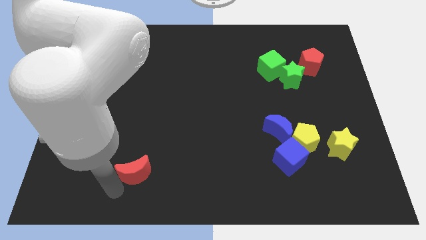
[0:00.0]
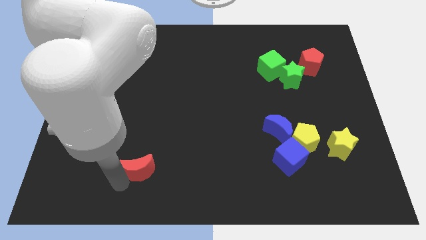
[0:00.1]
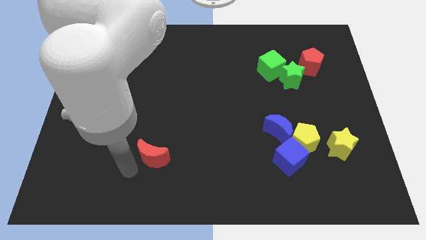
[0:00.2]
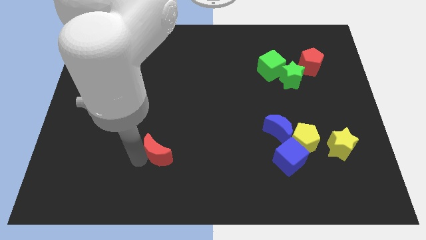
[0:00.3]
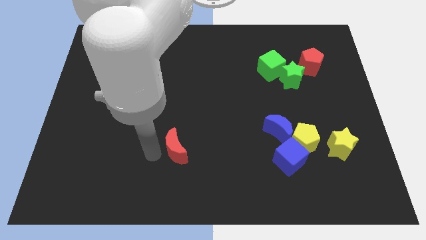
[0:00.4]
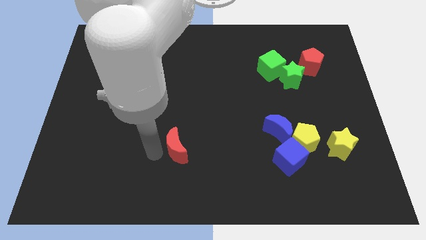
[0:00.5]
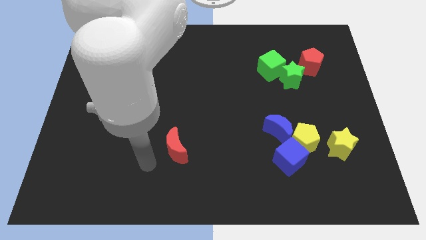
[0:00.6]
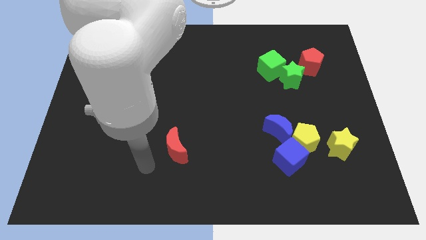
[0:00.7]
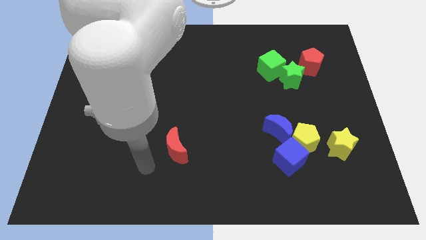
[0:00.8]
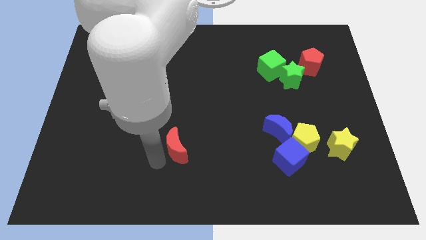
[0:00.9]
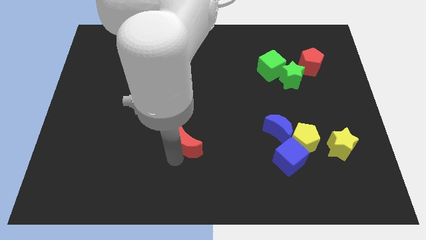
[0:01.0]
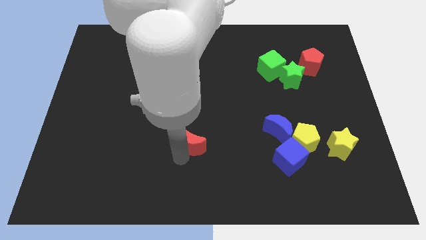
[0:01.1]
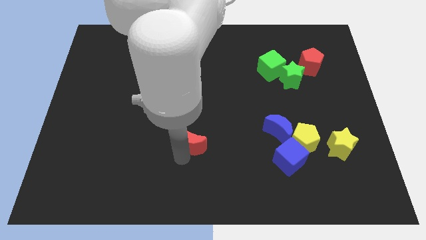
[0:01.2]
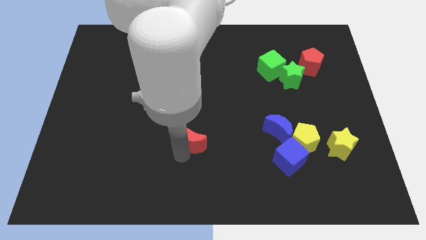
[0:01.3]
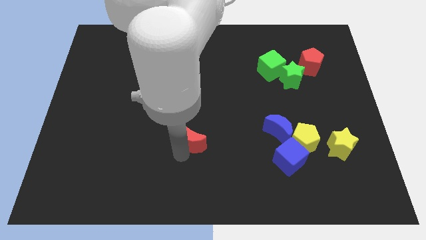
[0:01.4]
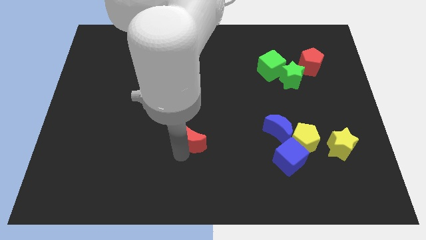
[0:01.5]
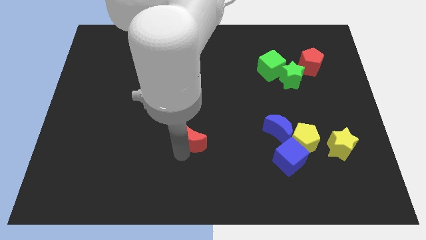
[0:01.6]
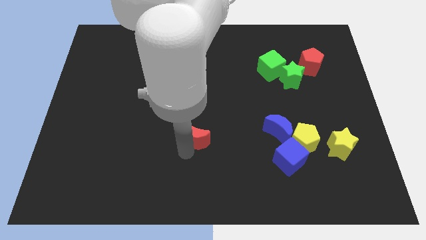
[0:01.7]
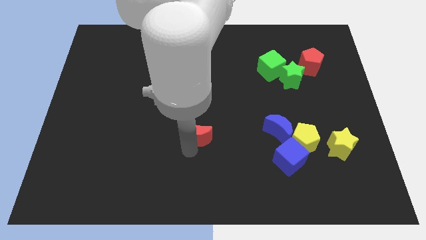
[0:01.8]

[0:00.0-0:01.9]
push the red crescent horizontal parallel to the blue crescent

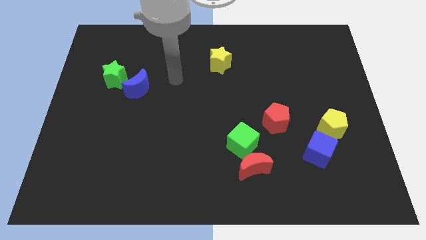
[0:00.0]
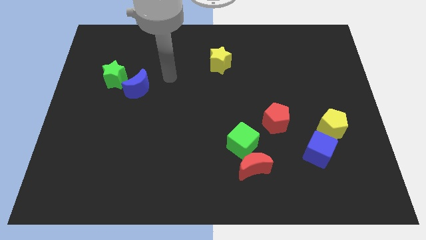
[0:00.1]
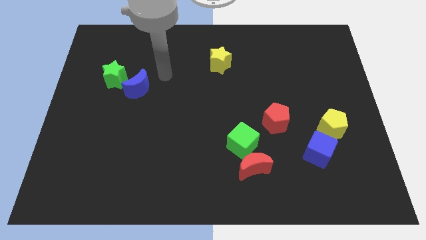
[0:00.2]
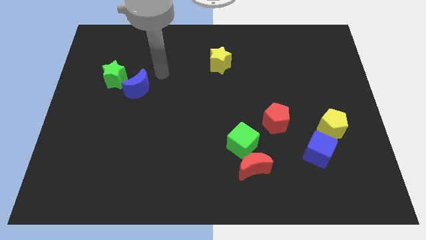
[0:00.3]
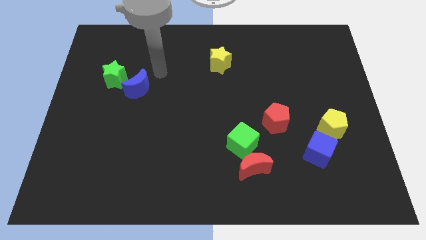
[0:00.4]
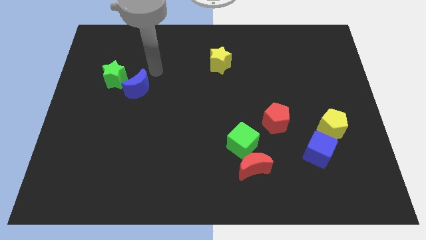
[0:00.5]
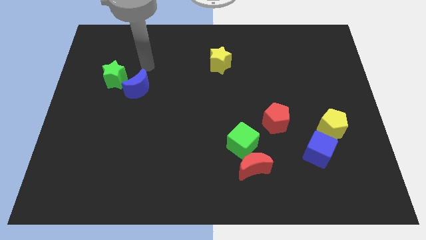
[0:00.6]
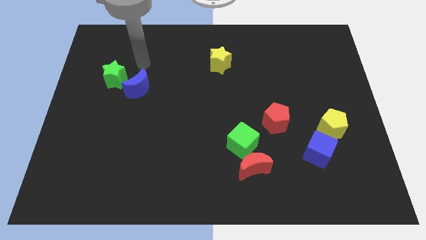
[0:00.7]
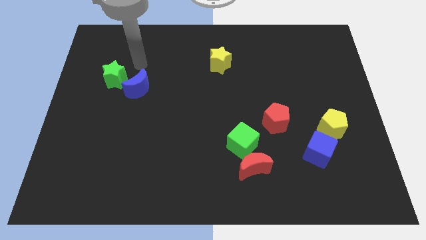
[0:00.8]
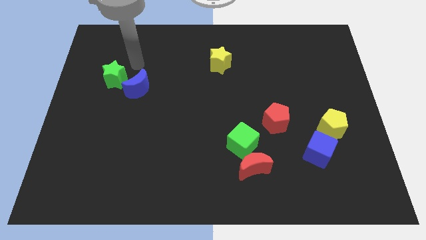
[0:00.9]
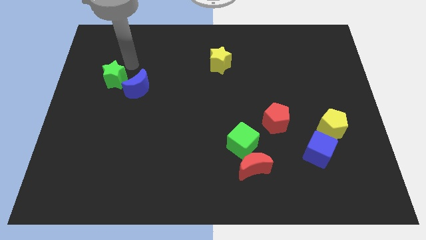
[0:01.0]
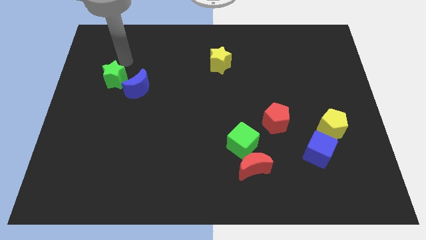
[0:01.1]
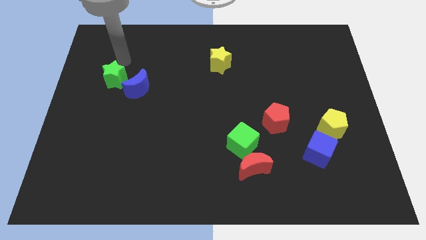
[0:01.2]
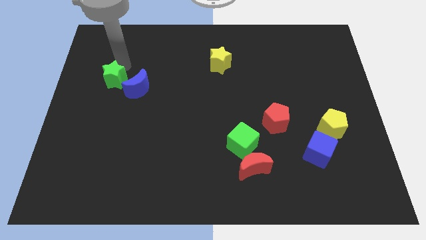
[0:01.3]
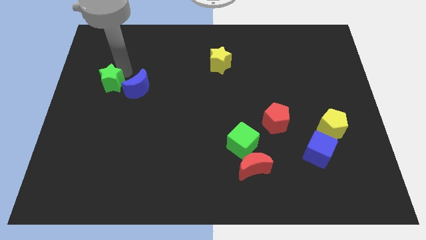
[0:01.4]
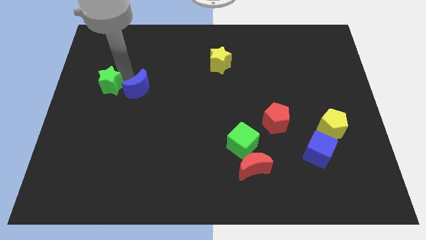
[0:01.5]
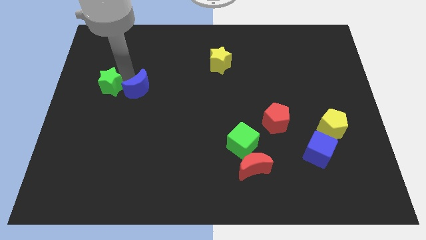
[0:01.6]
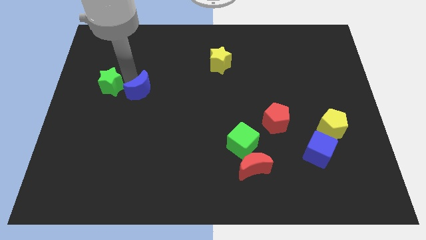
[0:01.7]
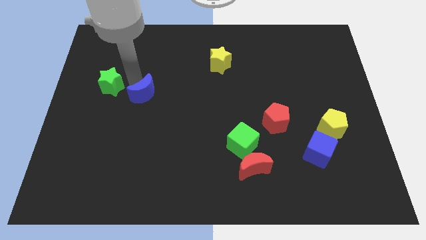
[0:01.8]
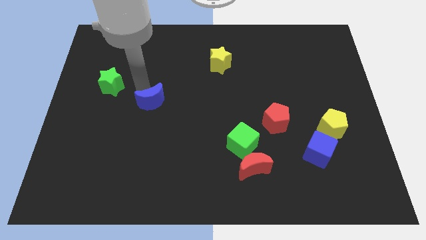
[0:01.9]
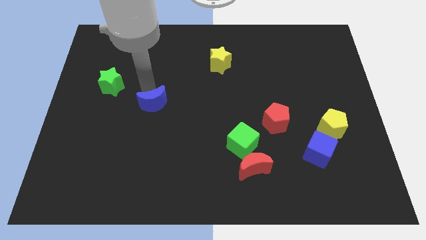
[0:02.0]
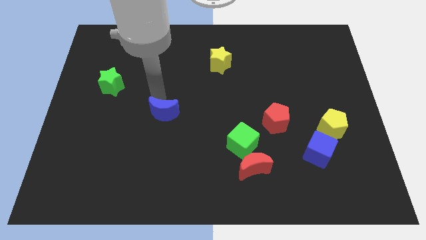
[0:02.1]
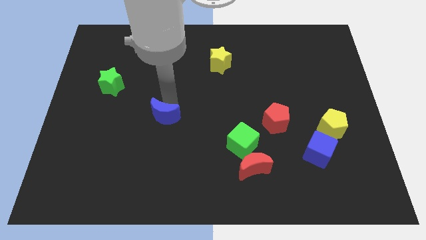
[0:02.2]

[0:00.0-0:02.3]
separate the blue crescent from the green star

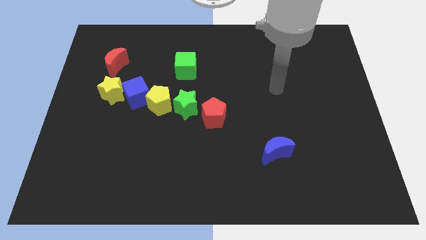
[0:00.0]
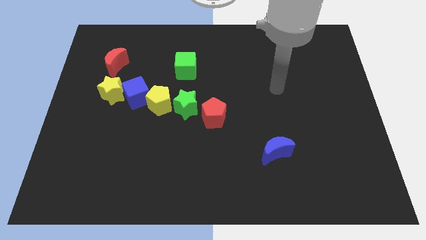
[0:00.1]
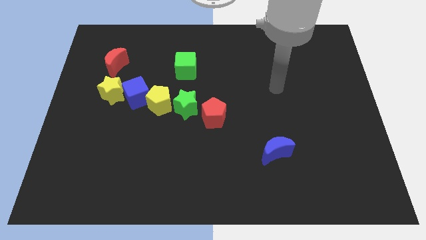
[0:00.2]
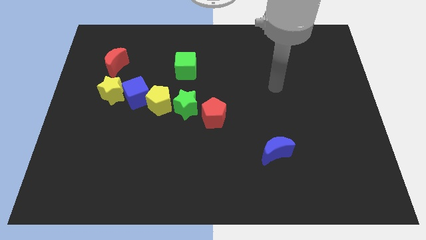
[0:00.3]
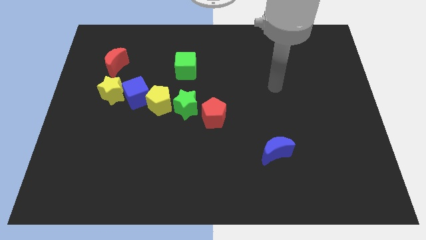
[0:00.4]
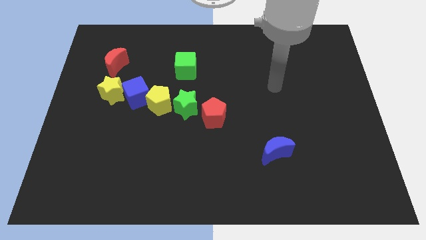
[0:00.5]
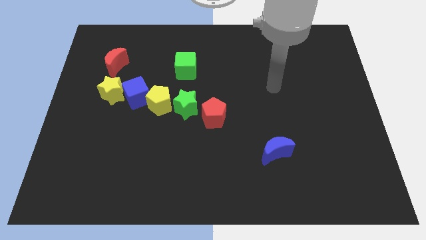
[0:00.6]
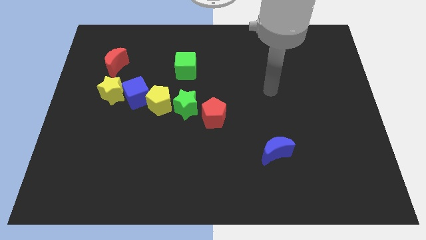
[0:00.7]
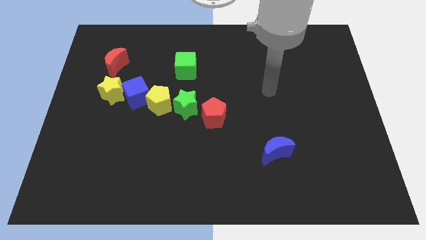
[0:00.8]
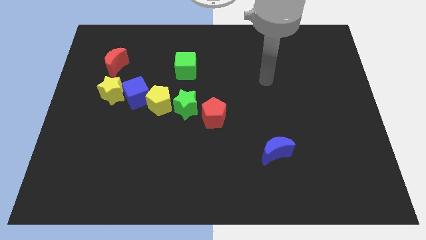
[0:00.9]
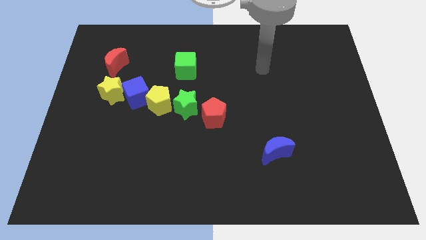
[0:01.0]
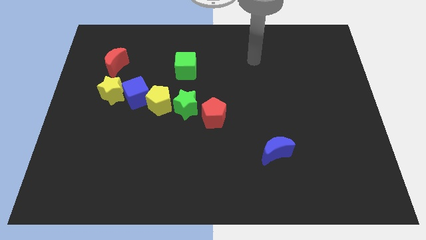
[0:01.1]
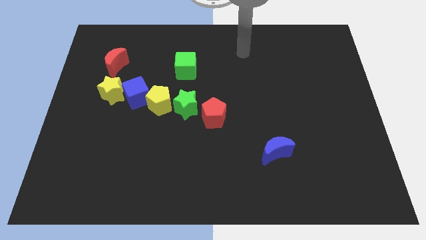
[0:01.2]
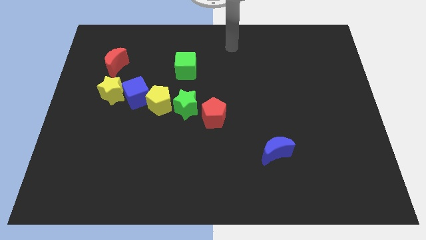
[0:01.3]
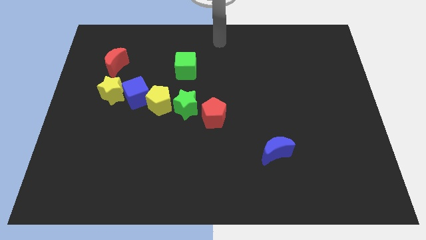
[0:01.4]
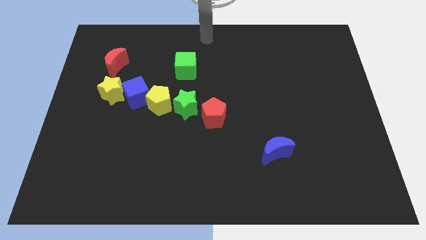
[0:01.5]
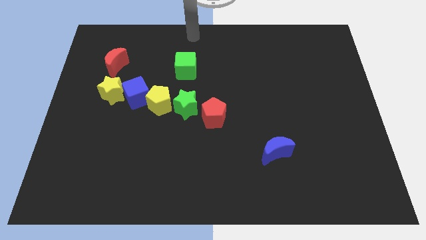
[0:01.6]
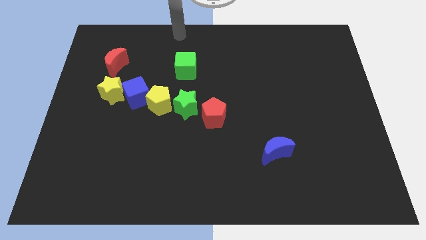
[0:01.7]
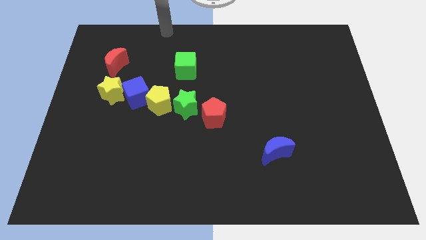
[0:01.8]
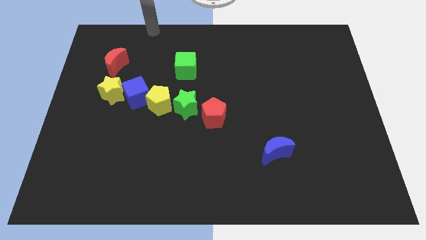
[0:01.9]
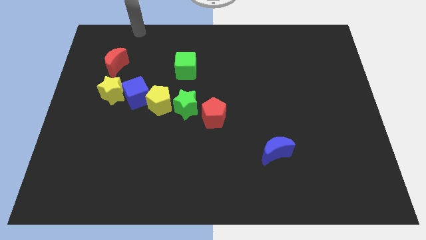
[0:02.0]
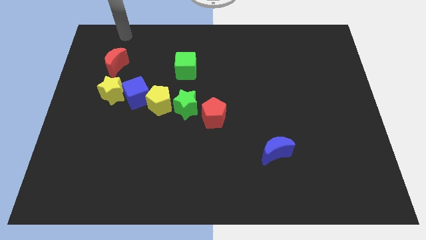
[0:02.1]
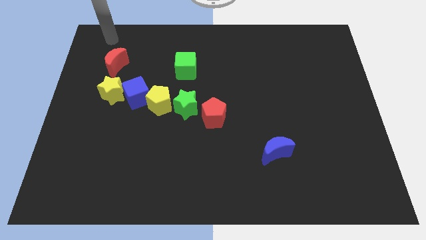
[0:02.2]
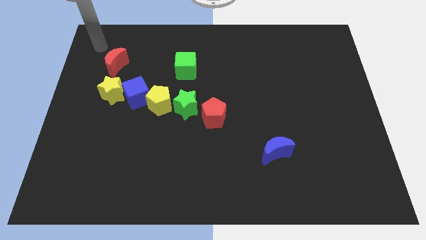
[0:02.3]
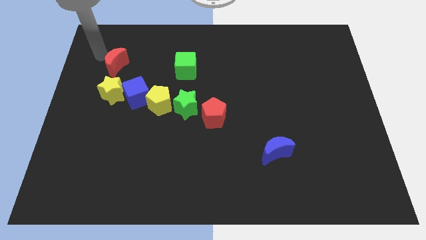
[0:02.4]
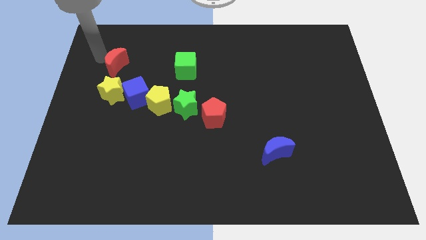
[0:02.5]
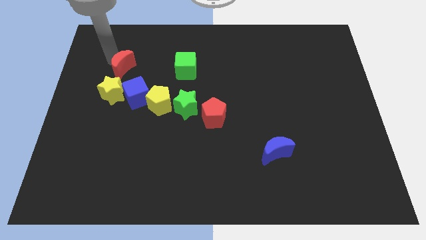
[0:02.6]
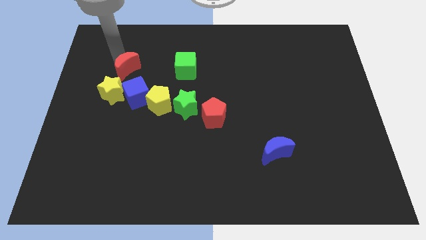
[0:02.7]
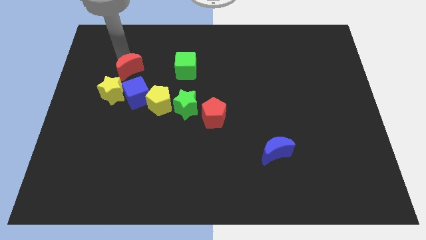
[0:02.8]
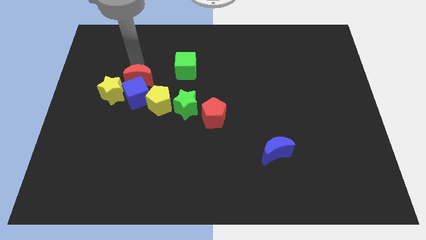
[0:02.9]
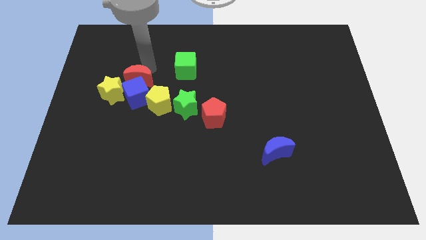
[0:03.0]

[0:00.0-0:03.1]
place the red crescent above the blue cube

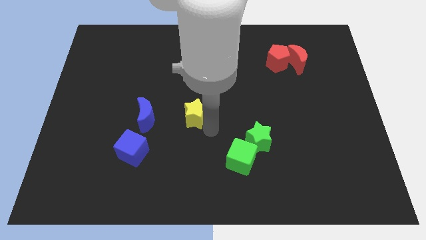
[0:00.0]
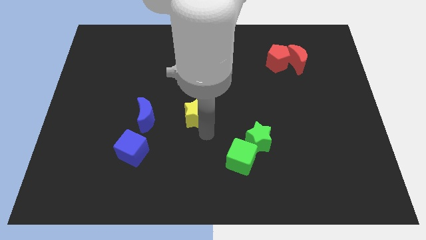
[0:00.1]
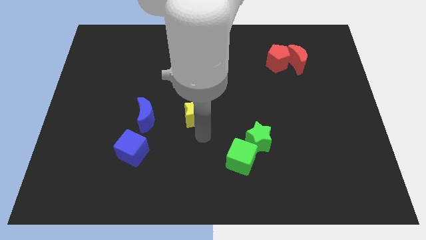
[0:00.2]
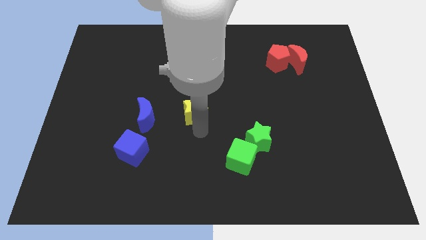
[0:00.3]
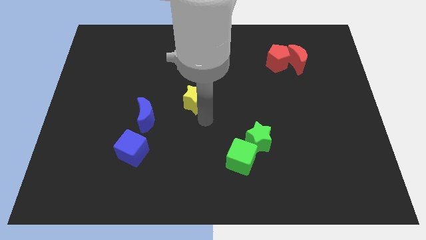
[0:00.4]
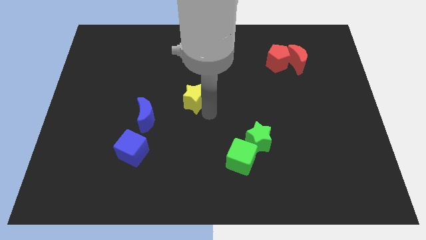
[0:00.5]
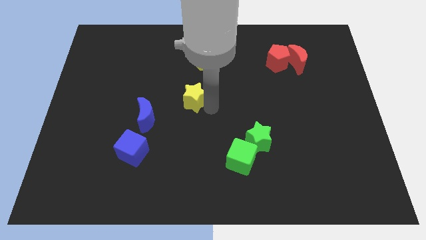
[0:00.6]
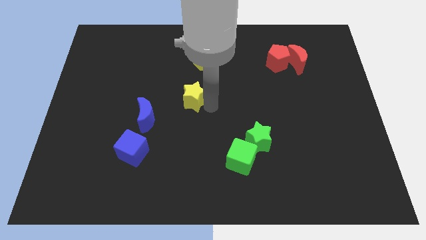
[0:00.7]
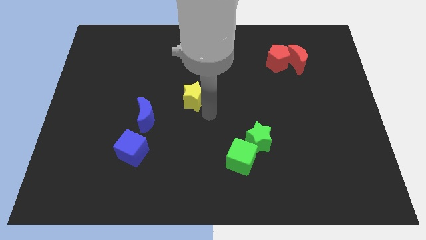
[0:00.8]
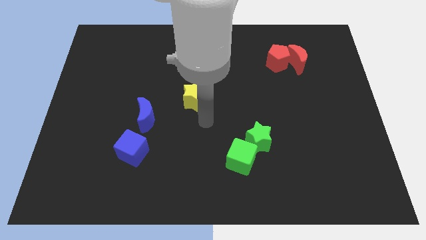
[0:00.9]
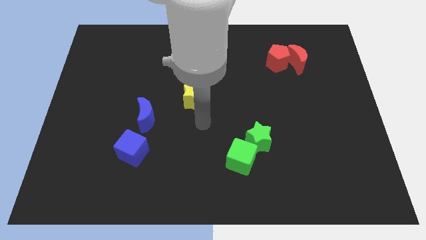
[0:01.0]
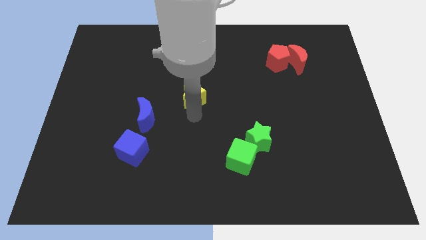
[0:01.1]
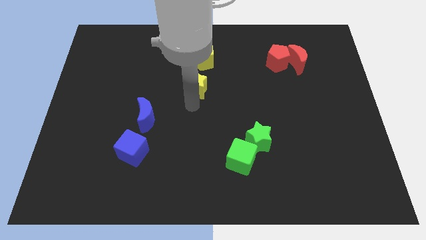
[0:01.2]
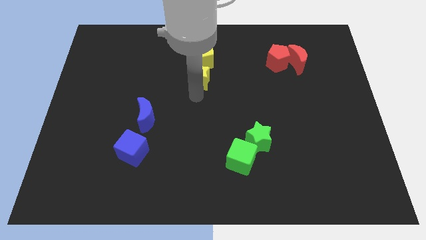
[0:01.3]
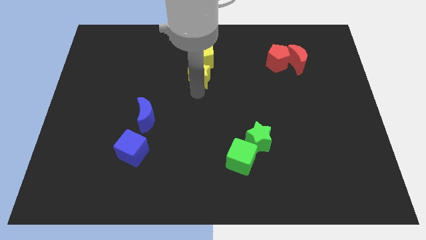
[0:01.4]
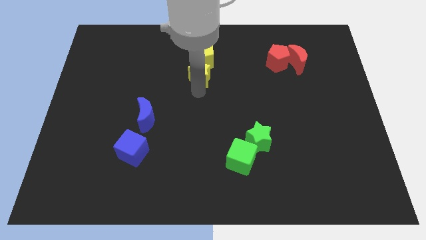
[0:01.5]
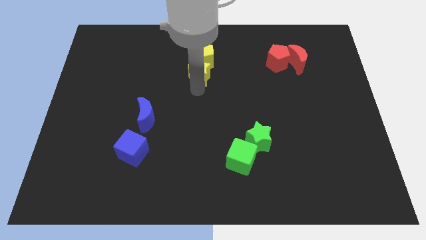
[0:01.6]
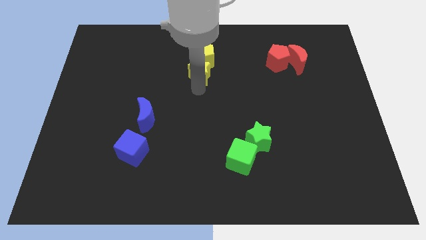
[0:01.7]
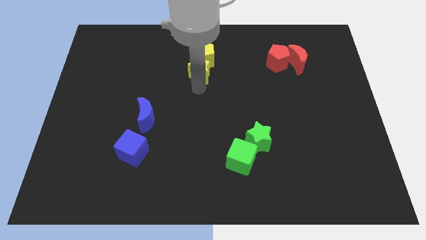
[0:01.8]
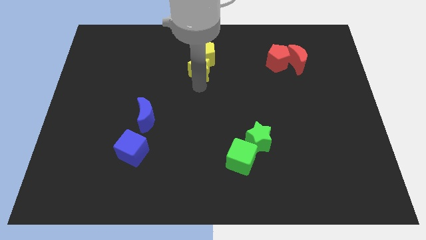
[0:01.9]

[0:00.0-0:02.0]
push the yellow star towards the bottom of the yellow pentagon

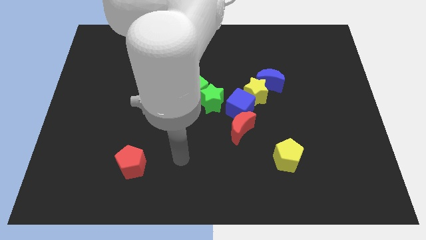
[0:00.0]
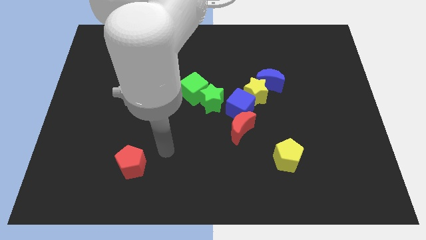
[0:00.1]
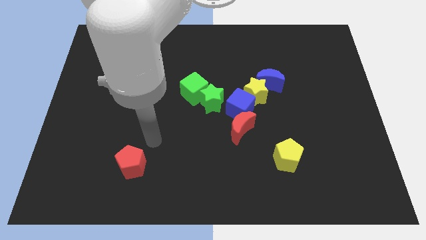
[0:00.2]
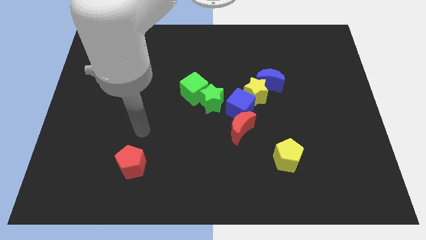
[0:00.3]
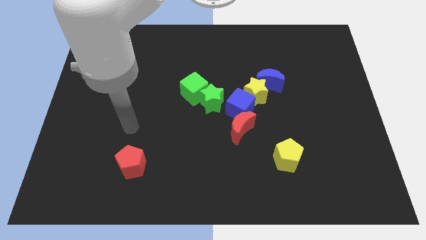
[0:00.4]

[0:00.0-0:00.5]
move the arm towards the top of the red pentagon
